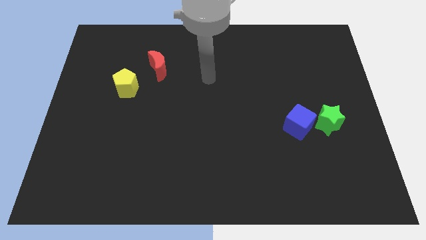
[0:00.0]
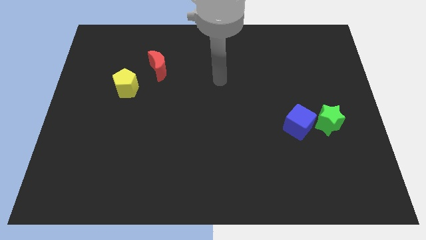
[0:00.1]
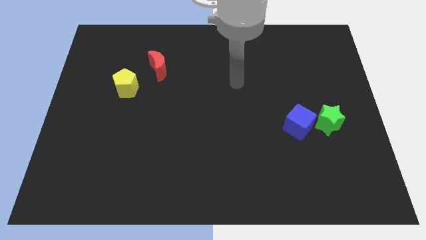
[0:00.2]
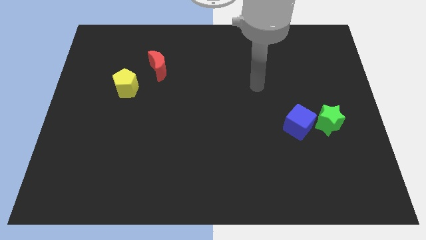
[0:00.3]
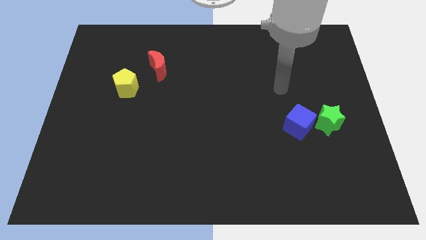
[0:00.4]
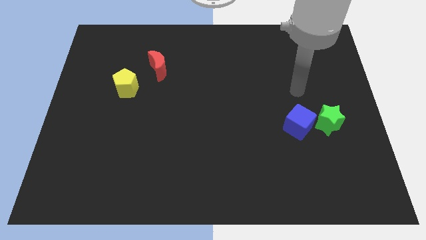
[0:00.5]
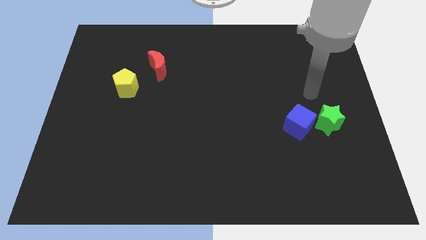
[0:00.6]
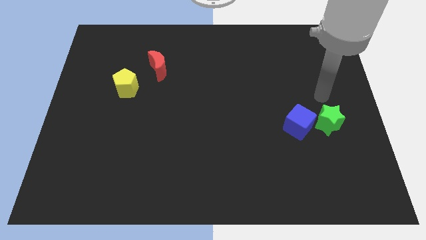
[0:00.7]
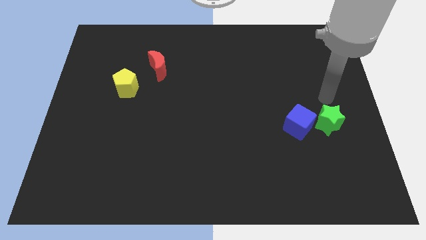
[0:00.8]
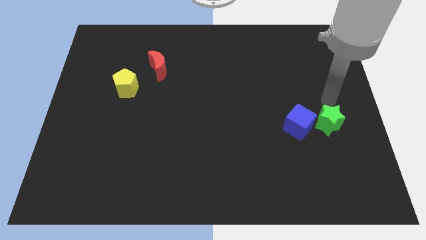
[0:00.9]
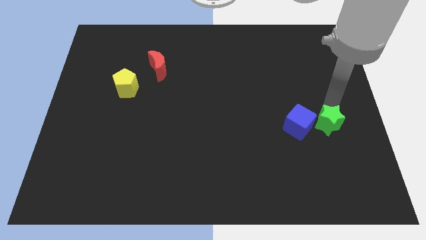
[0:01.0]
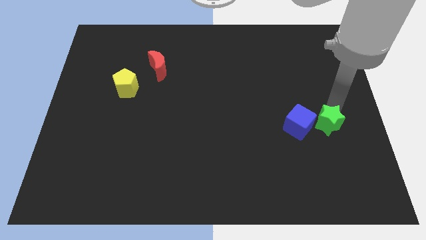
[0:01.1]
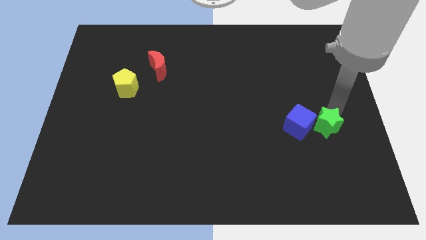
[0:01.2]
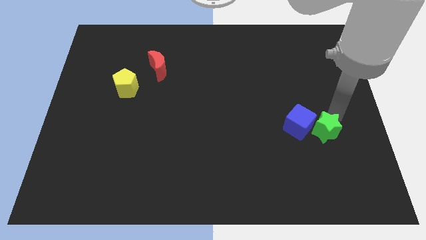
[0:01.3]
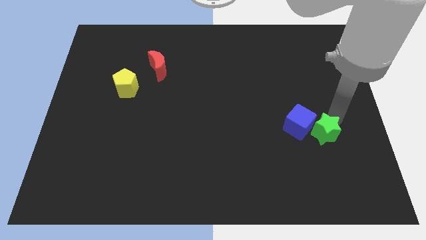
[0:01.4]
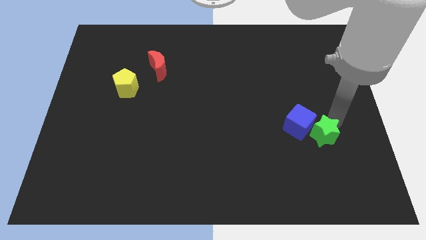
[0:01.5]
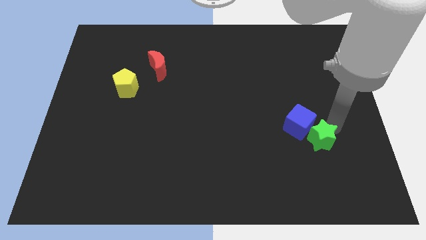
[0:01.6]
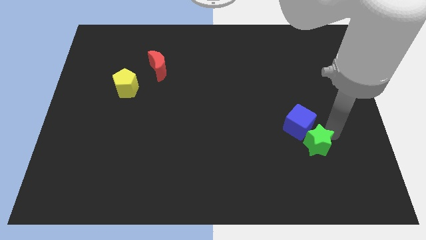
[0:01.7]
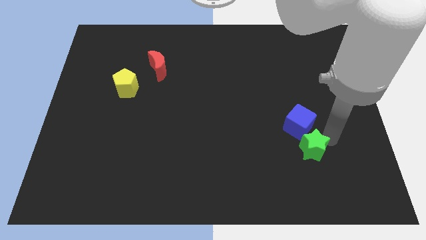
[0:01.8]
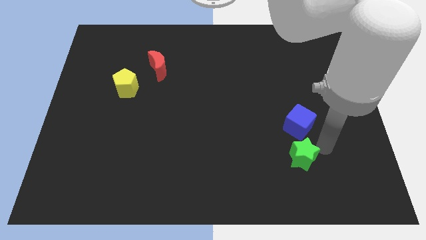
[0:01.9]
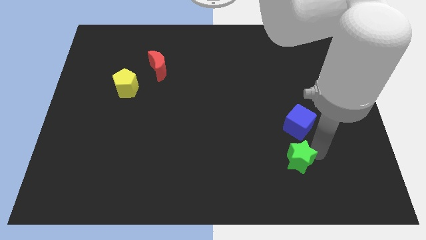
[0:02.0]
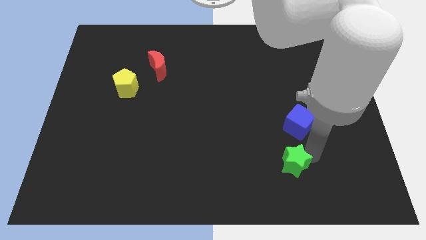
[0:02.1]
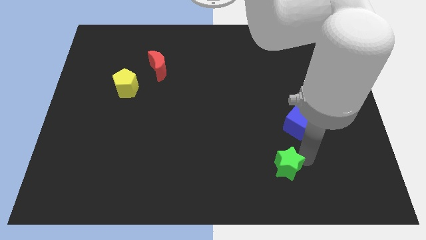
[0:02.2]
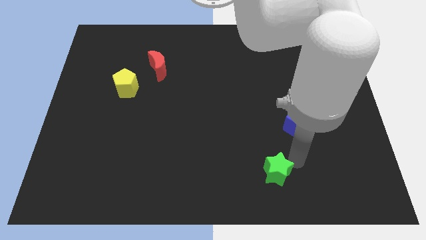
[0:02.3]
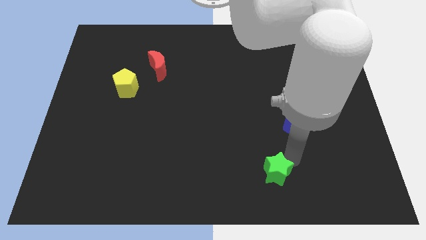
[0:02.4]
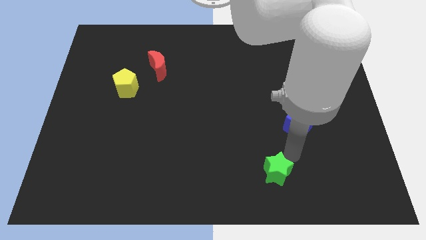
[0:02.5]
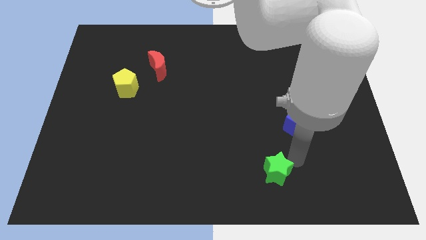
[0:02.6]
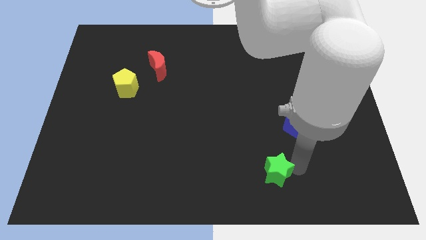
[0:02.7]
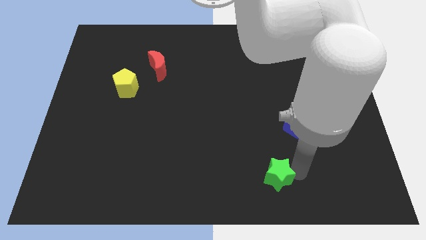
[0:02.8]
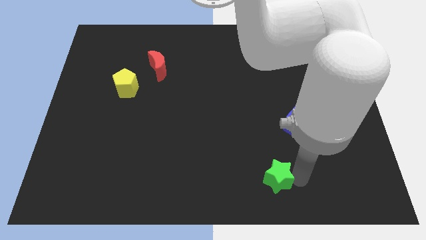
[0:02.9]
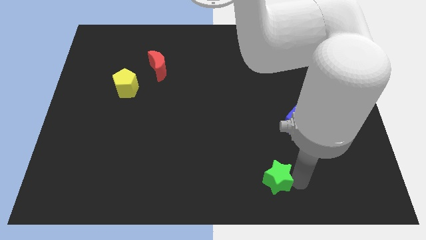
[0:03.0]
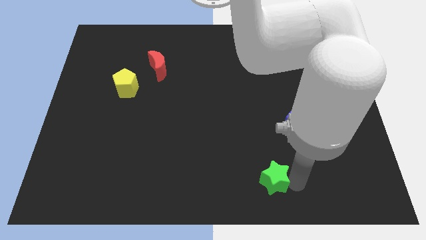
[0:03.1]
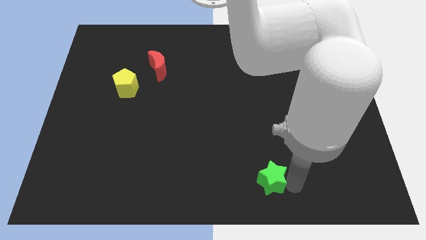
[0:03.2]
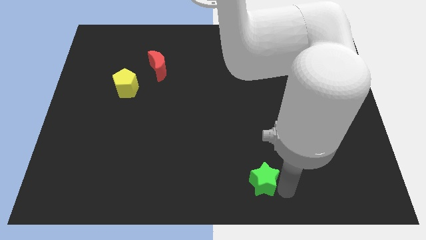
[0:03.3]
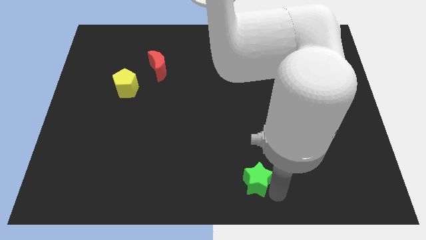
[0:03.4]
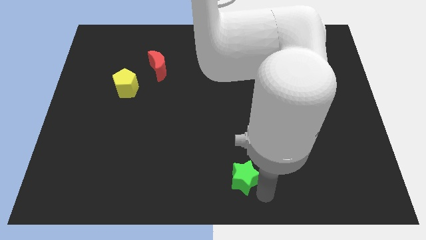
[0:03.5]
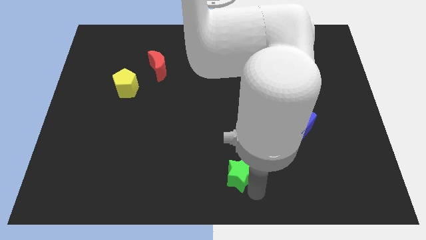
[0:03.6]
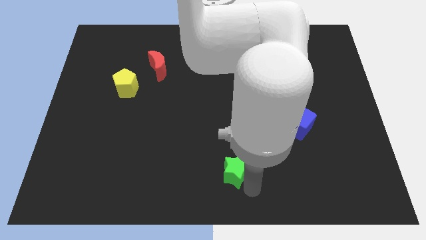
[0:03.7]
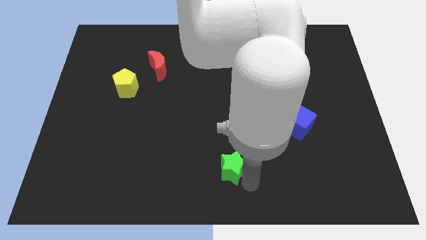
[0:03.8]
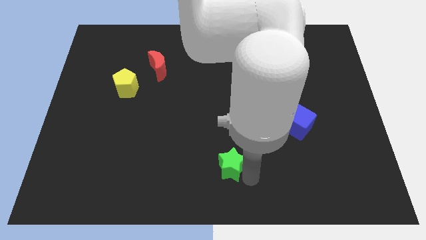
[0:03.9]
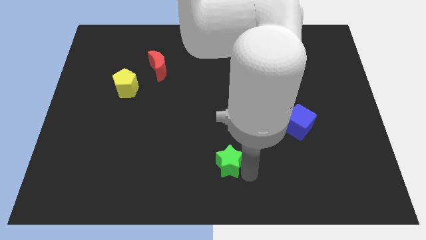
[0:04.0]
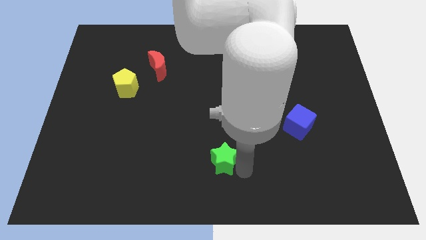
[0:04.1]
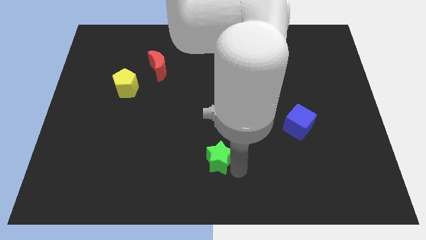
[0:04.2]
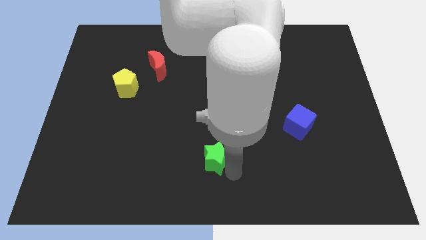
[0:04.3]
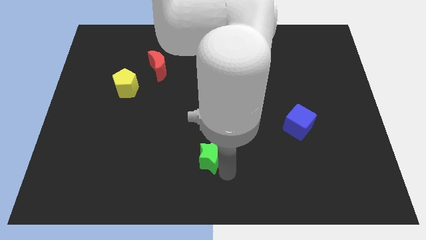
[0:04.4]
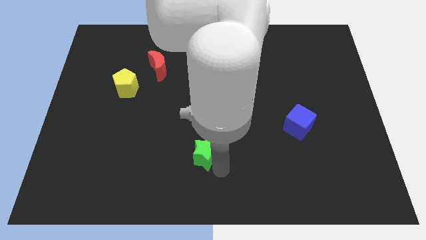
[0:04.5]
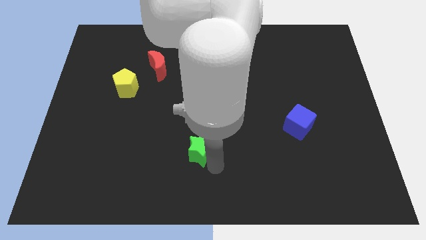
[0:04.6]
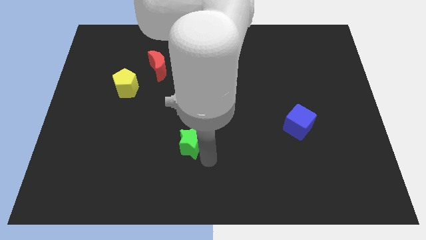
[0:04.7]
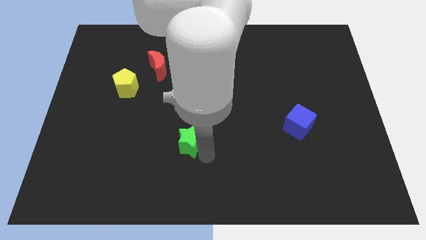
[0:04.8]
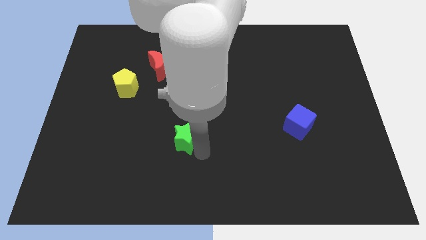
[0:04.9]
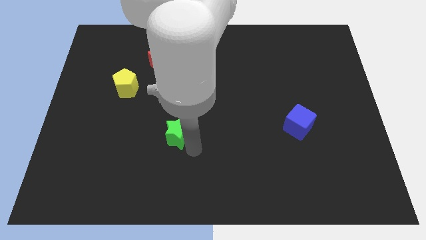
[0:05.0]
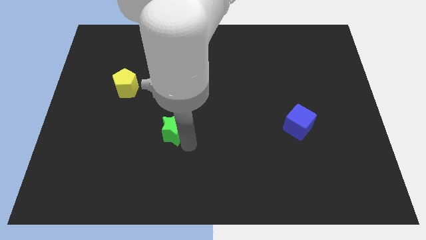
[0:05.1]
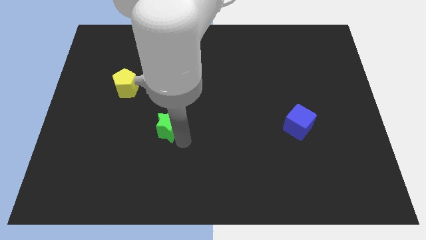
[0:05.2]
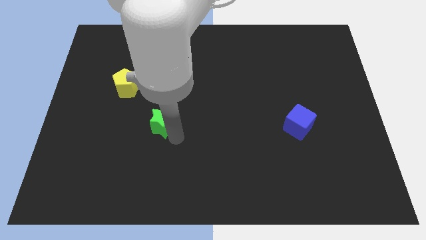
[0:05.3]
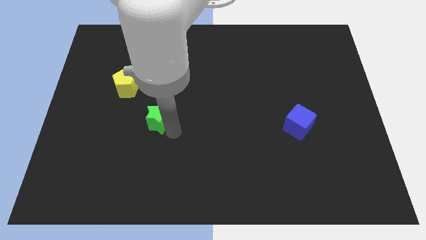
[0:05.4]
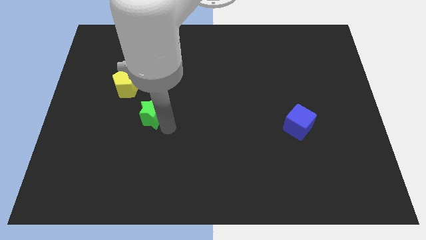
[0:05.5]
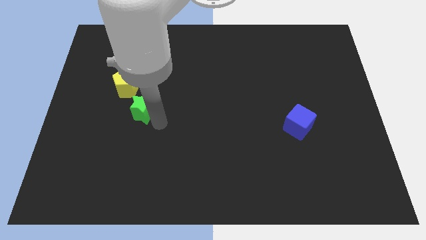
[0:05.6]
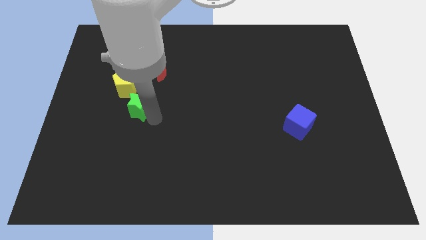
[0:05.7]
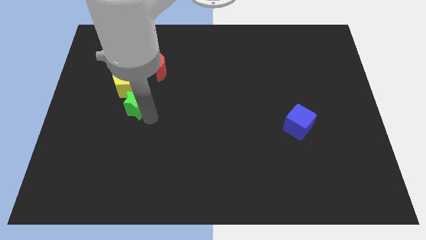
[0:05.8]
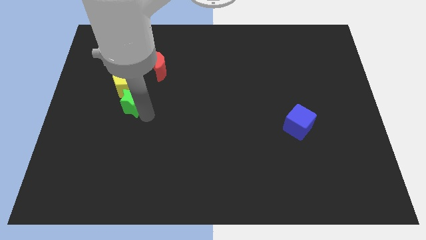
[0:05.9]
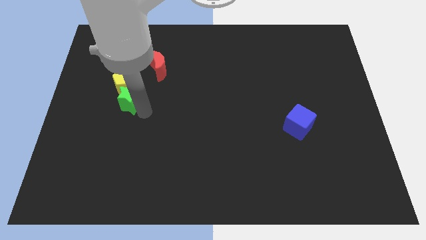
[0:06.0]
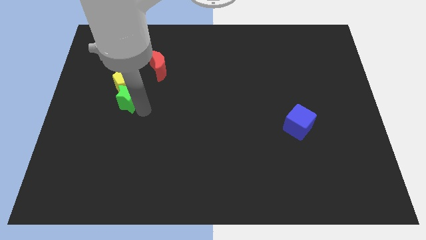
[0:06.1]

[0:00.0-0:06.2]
slide the green star close to the yellow block

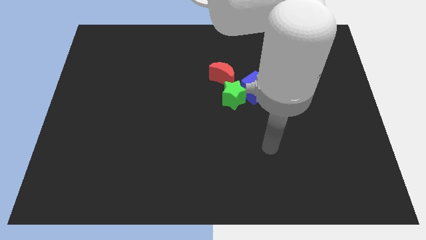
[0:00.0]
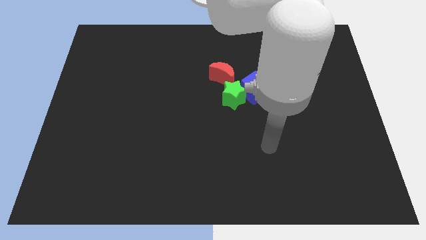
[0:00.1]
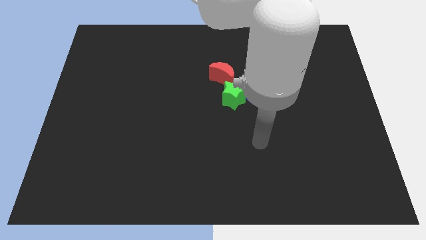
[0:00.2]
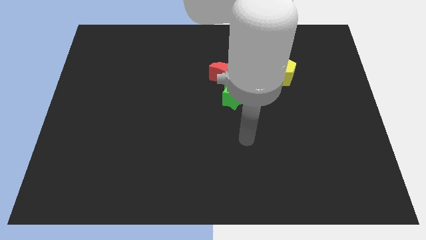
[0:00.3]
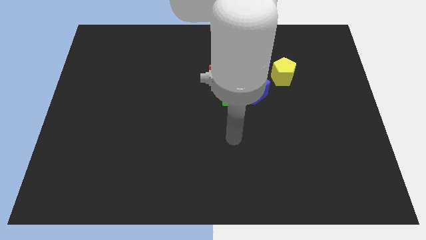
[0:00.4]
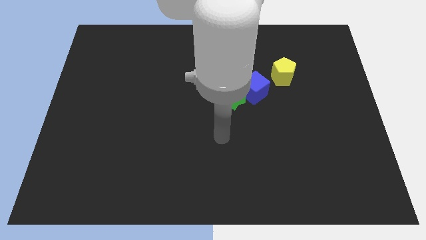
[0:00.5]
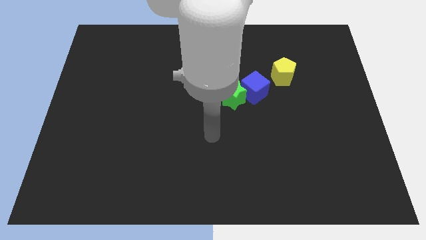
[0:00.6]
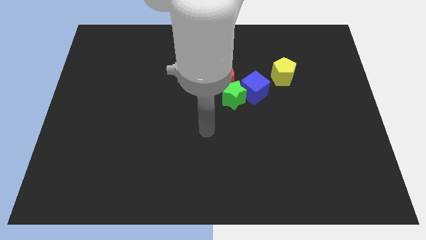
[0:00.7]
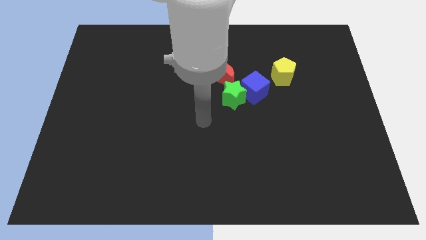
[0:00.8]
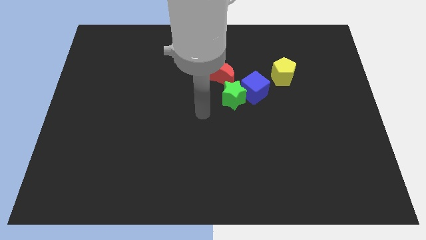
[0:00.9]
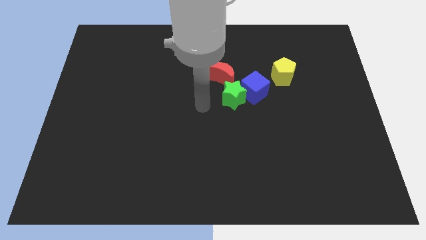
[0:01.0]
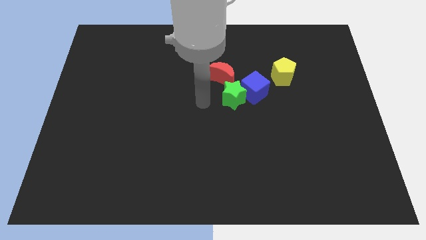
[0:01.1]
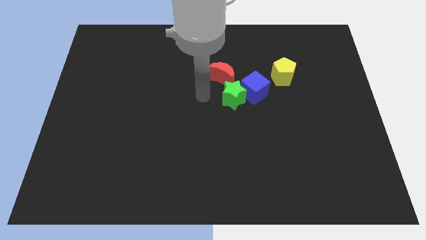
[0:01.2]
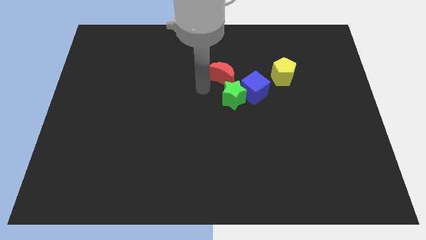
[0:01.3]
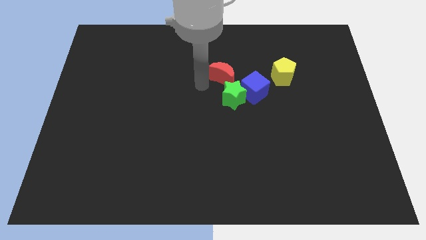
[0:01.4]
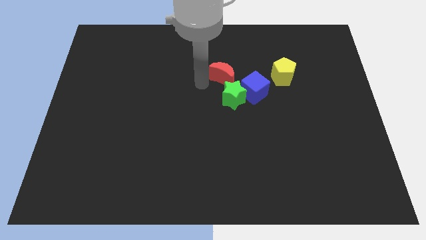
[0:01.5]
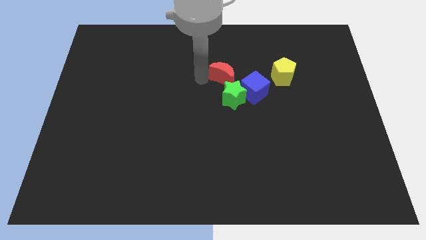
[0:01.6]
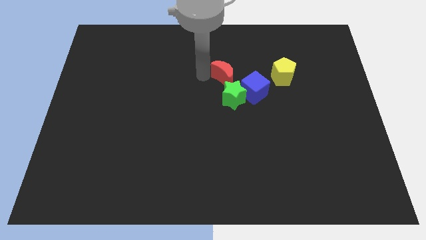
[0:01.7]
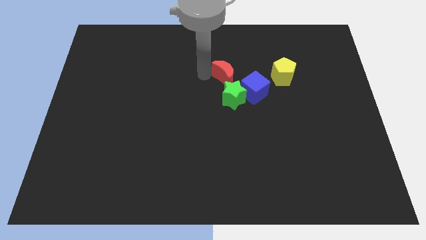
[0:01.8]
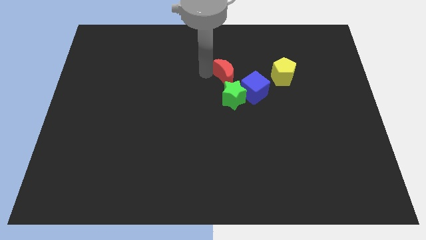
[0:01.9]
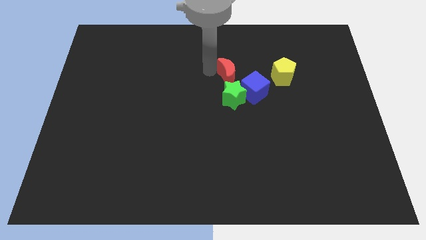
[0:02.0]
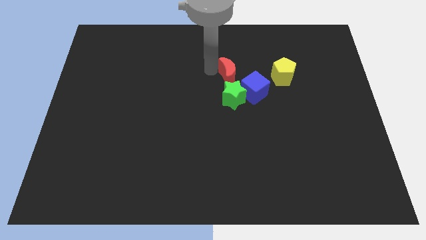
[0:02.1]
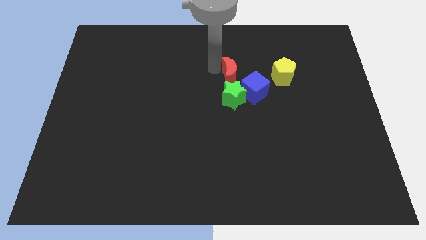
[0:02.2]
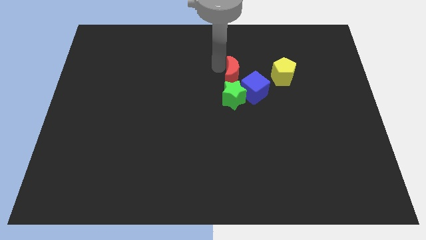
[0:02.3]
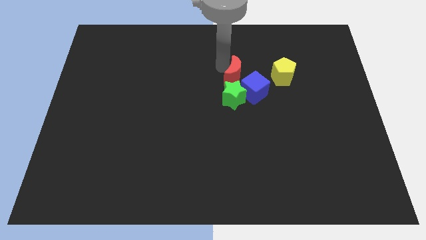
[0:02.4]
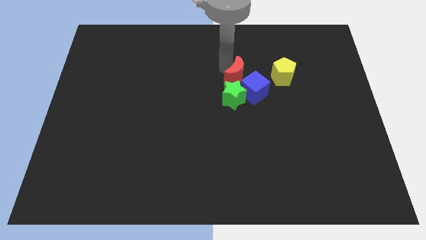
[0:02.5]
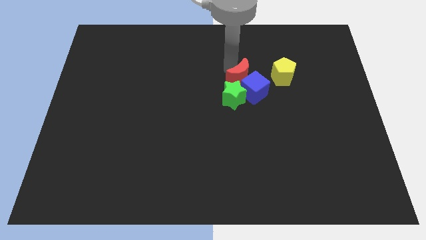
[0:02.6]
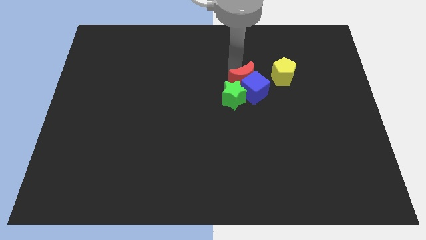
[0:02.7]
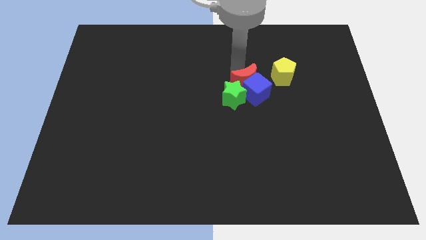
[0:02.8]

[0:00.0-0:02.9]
move the moon next to the blue block
